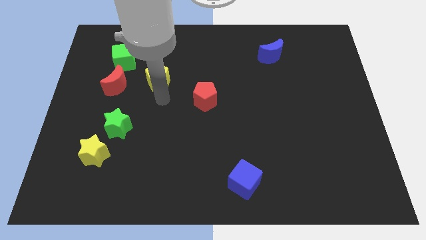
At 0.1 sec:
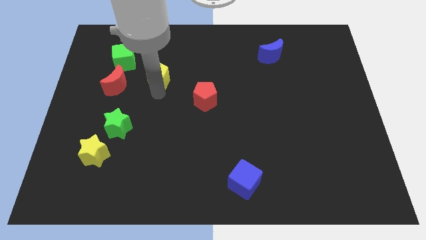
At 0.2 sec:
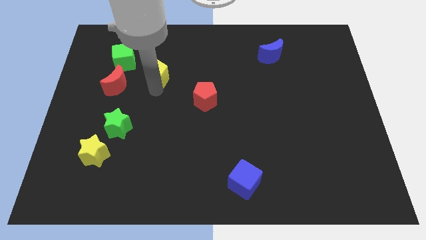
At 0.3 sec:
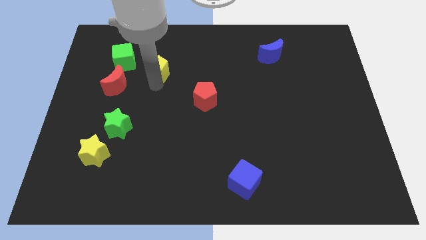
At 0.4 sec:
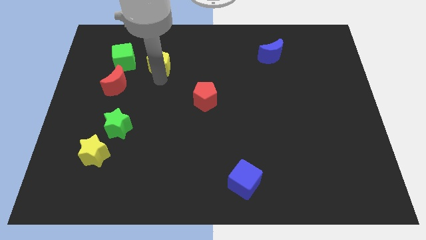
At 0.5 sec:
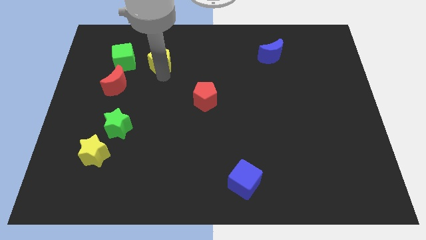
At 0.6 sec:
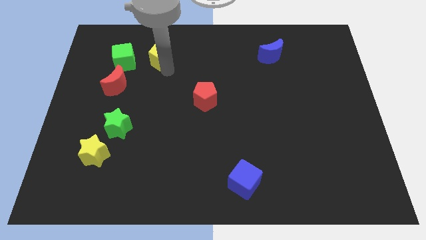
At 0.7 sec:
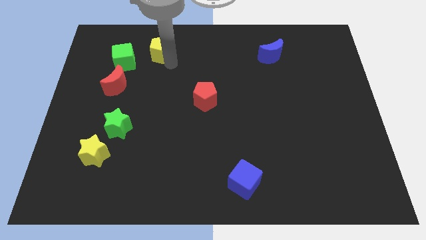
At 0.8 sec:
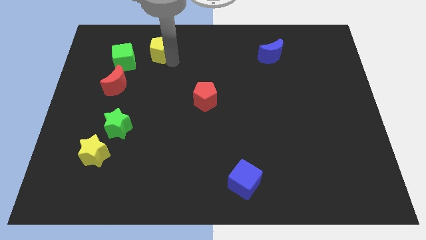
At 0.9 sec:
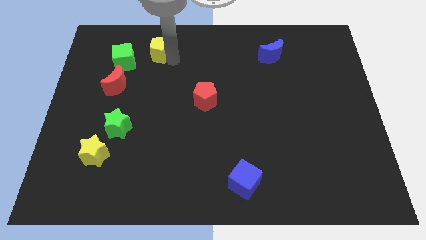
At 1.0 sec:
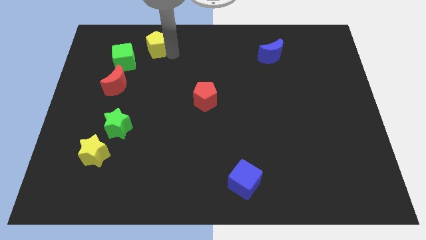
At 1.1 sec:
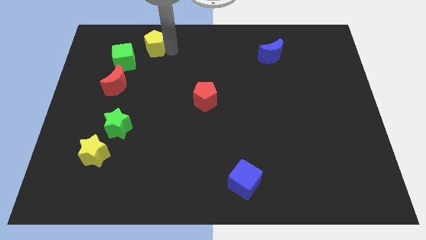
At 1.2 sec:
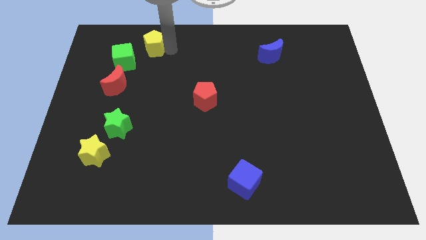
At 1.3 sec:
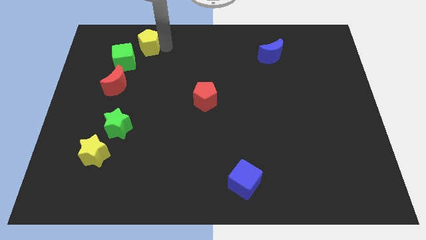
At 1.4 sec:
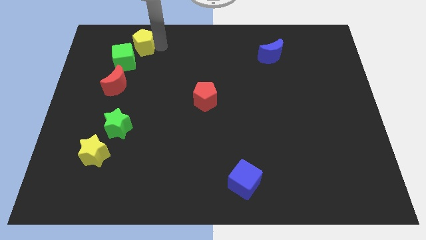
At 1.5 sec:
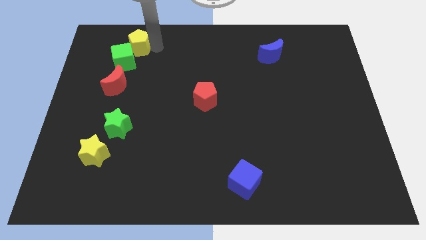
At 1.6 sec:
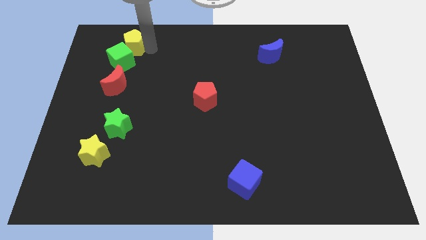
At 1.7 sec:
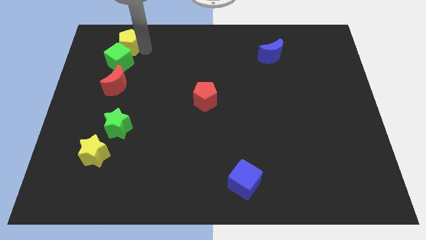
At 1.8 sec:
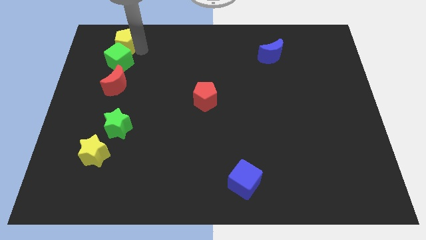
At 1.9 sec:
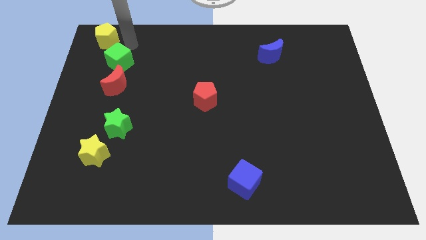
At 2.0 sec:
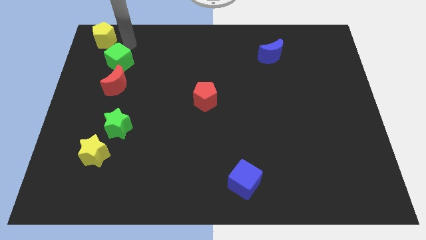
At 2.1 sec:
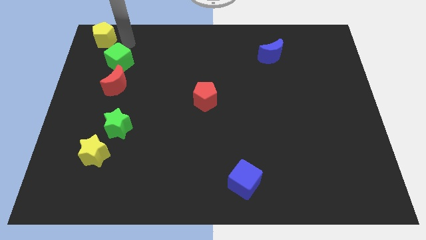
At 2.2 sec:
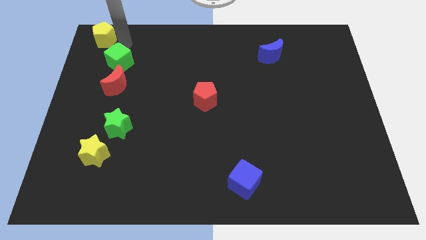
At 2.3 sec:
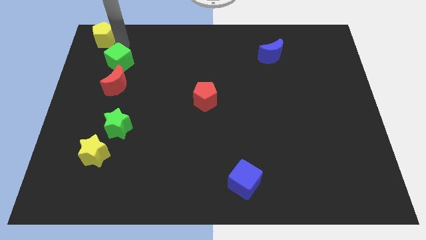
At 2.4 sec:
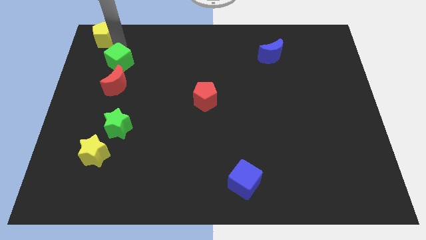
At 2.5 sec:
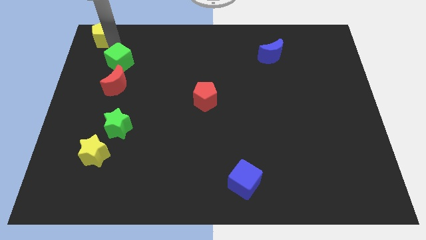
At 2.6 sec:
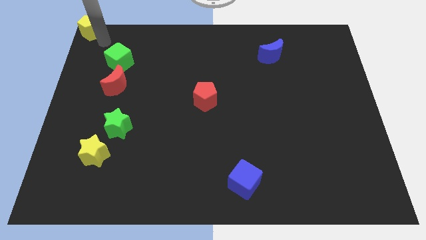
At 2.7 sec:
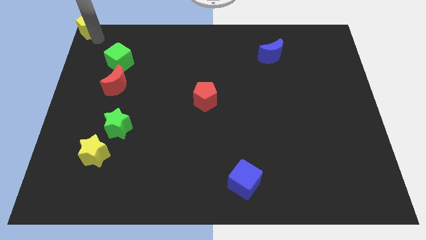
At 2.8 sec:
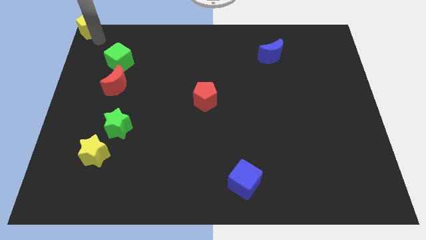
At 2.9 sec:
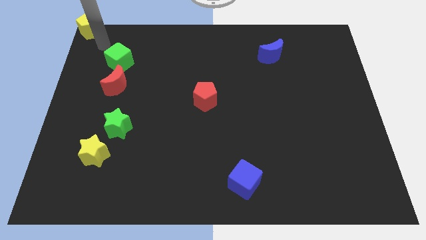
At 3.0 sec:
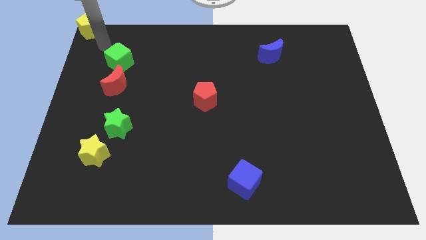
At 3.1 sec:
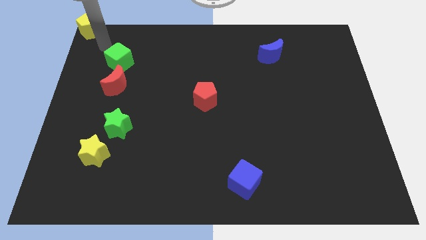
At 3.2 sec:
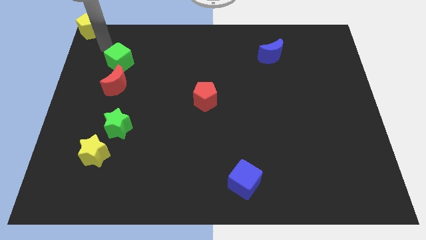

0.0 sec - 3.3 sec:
place the yellow pentagon to the top left of the board

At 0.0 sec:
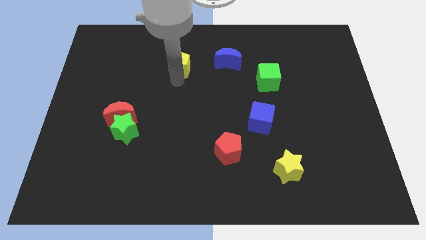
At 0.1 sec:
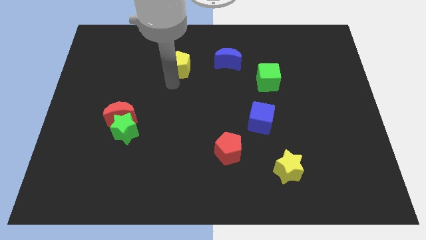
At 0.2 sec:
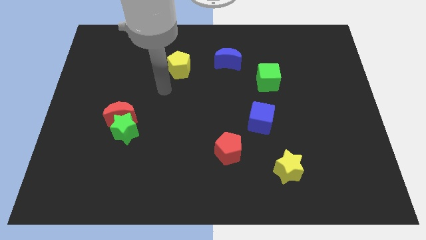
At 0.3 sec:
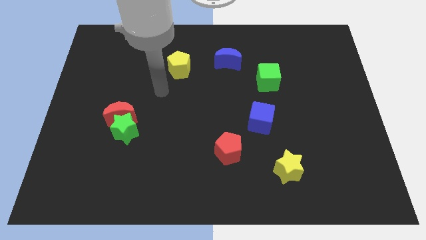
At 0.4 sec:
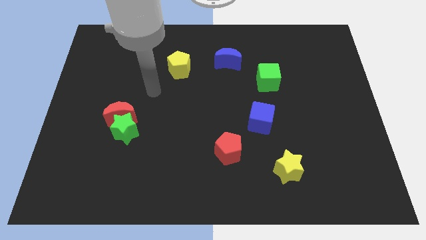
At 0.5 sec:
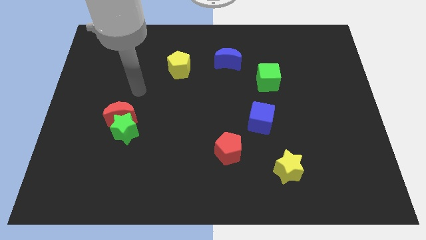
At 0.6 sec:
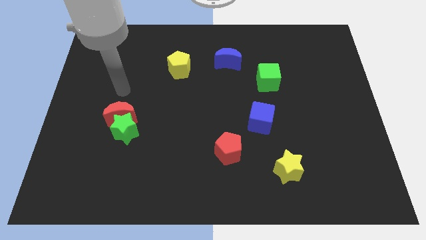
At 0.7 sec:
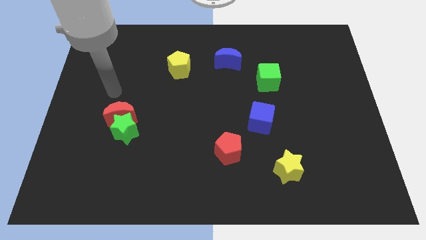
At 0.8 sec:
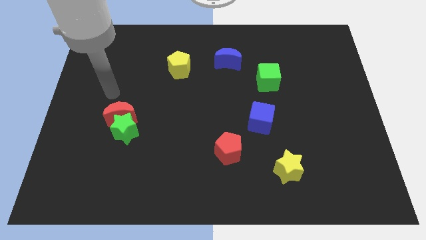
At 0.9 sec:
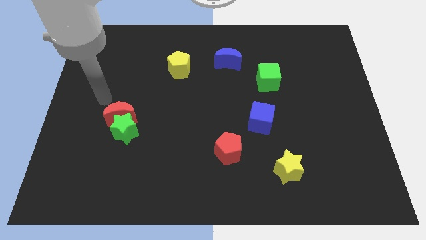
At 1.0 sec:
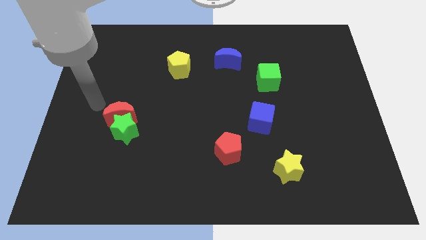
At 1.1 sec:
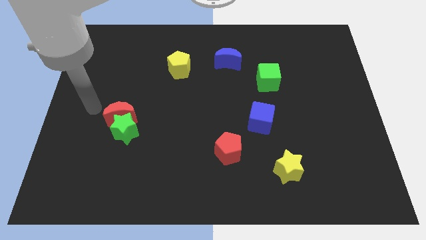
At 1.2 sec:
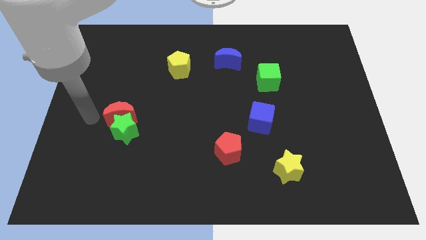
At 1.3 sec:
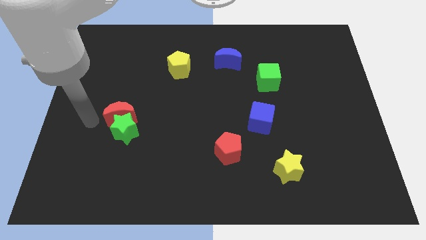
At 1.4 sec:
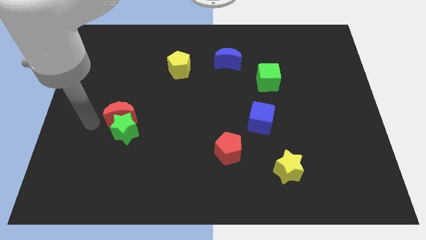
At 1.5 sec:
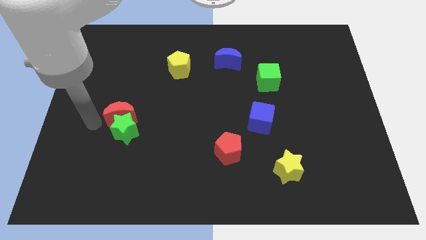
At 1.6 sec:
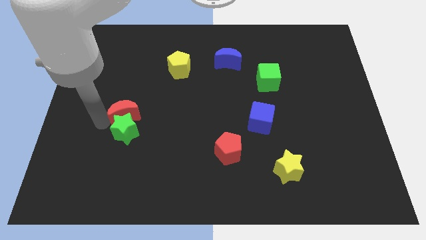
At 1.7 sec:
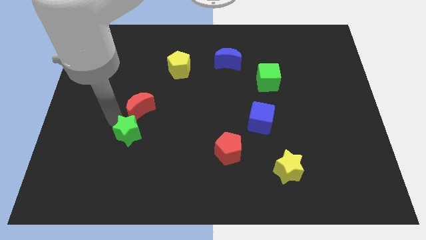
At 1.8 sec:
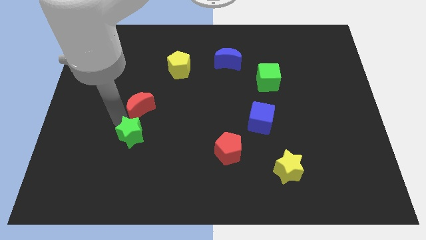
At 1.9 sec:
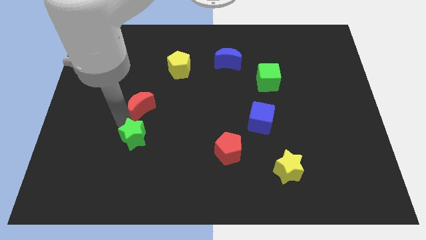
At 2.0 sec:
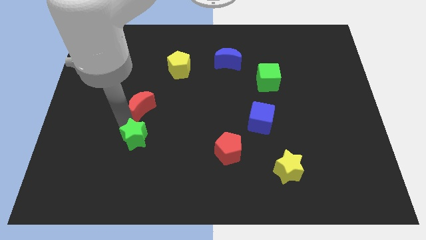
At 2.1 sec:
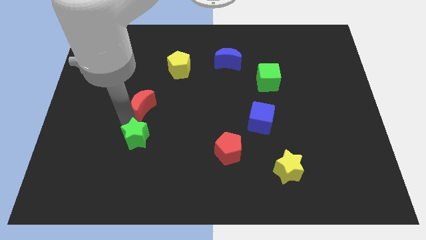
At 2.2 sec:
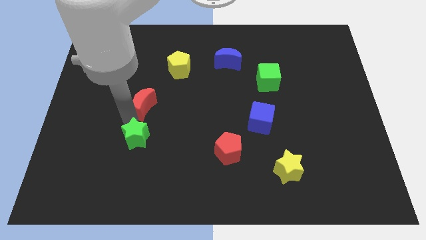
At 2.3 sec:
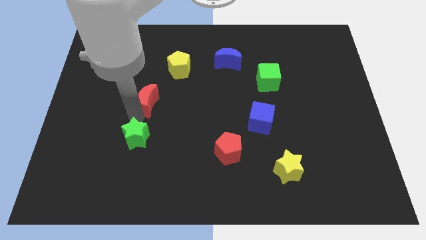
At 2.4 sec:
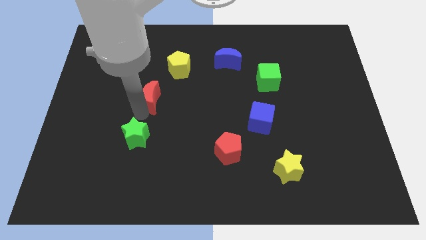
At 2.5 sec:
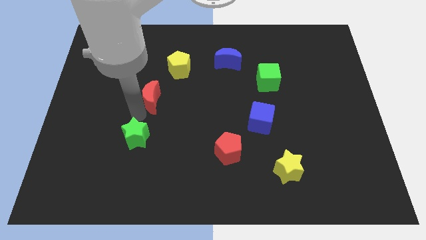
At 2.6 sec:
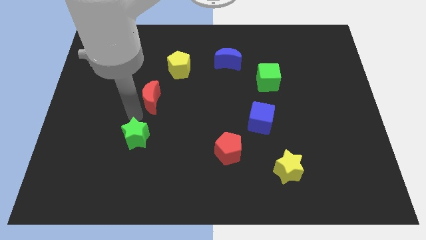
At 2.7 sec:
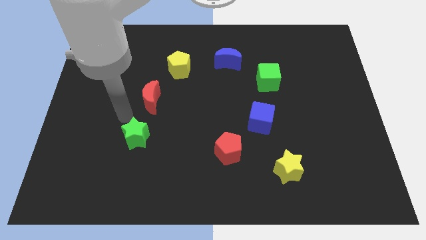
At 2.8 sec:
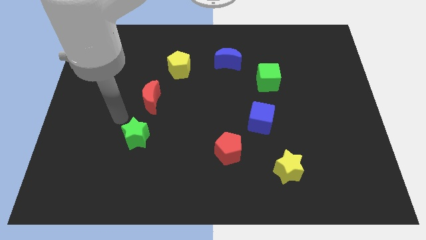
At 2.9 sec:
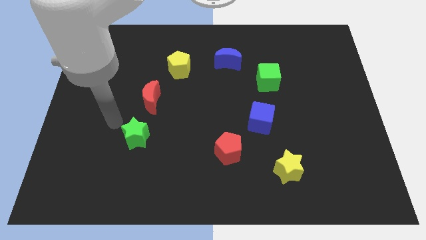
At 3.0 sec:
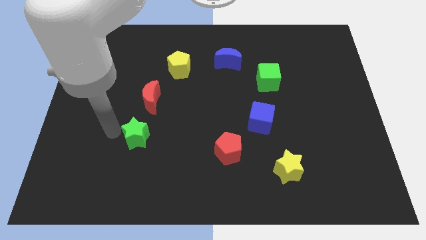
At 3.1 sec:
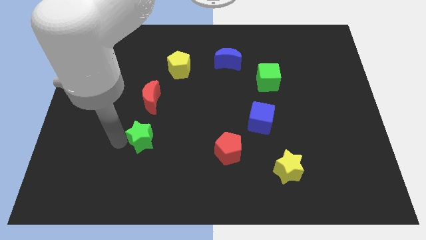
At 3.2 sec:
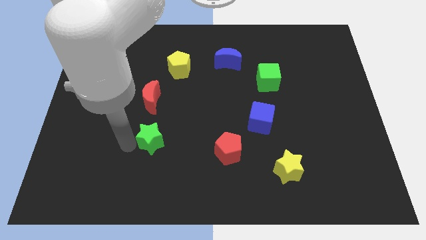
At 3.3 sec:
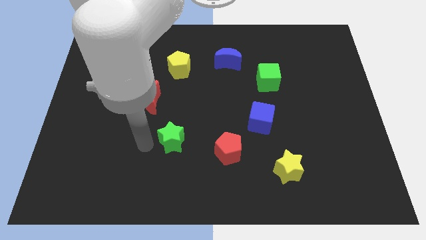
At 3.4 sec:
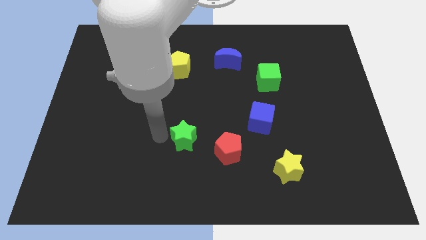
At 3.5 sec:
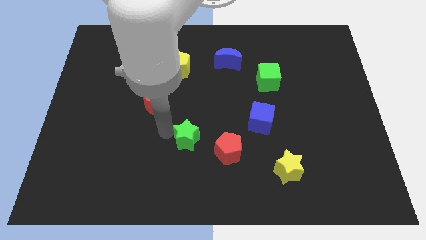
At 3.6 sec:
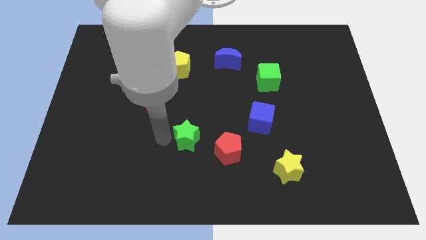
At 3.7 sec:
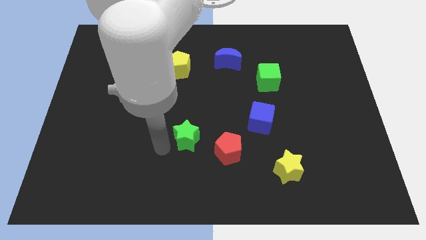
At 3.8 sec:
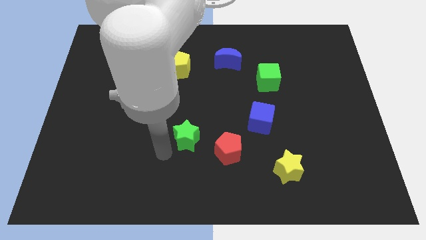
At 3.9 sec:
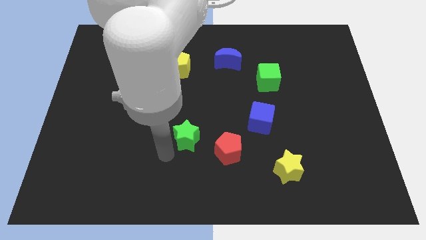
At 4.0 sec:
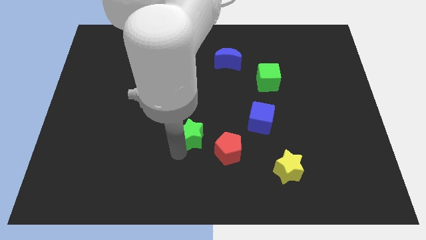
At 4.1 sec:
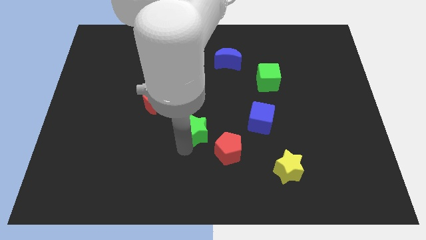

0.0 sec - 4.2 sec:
place the green star in between the red moon and red pentagon

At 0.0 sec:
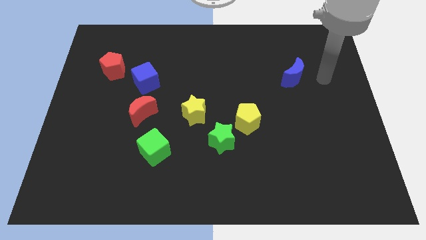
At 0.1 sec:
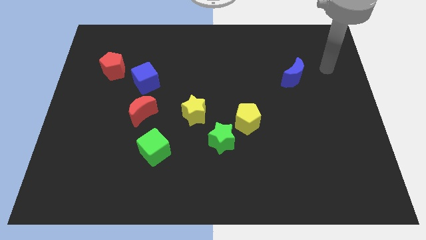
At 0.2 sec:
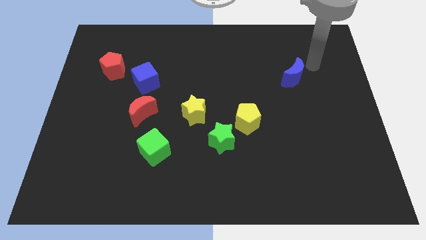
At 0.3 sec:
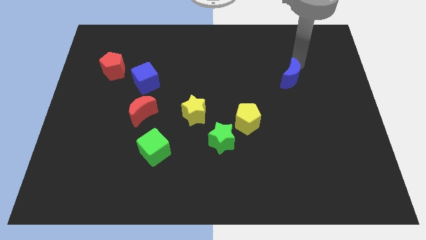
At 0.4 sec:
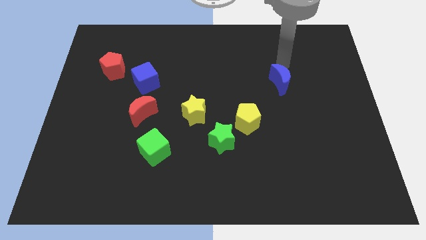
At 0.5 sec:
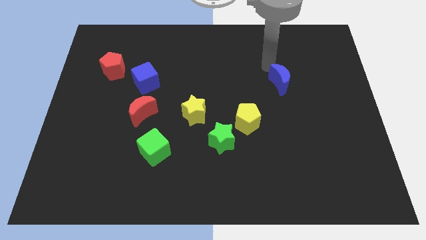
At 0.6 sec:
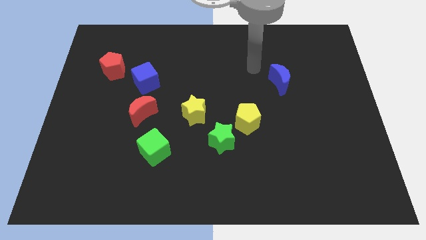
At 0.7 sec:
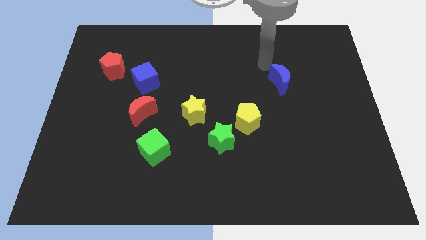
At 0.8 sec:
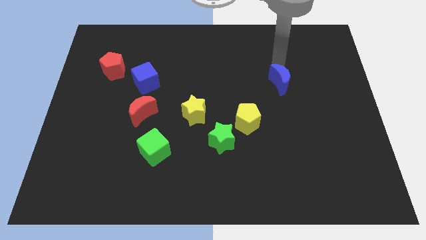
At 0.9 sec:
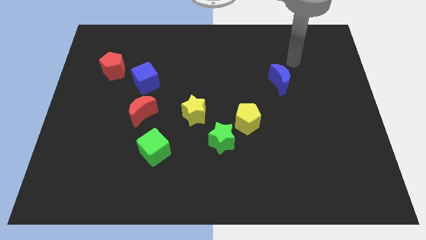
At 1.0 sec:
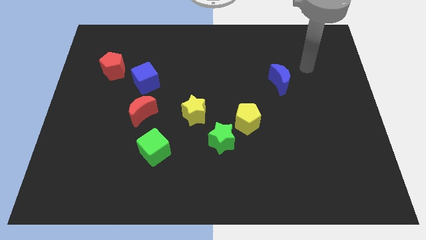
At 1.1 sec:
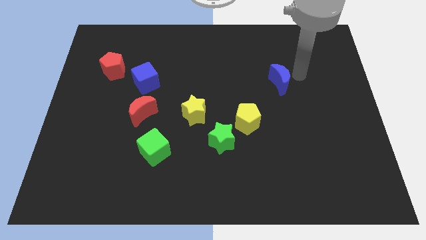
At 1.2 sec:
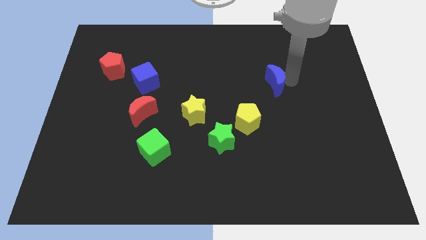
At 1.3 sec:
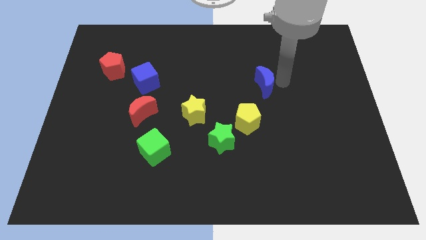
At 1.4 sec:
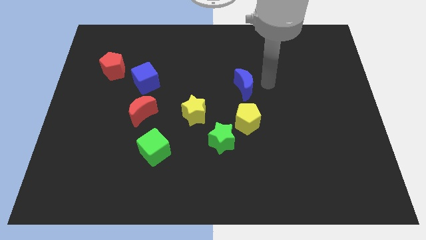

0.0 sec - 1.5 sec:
place the blue moon diagonal to the top right of yellow pentagon
